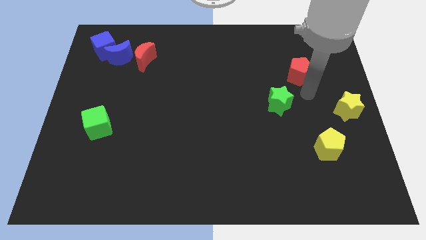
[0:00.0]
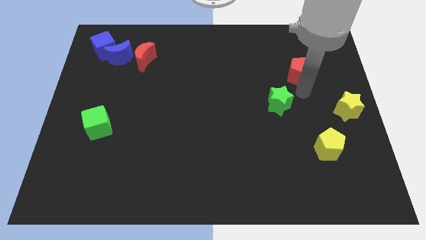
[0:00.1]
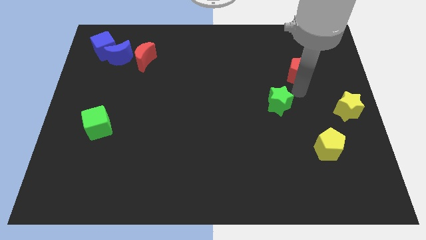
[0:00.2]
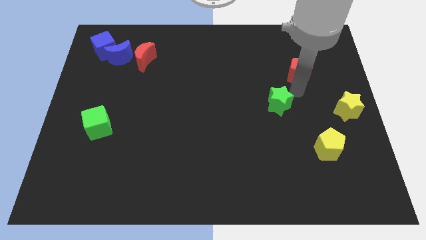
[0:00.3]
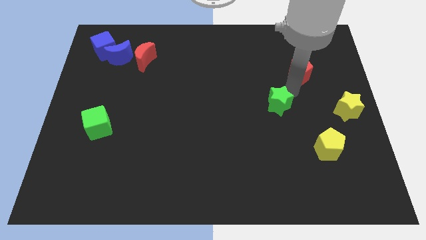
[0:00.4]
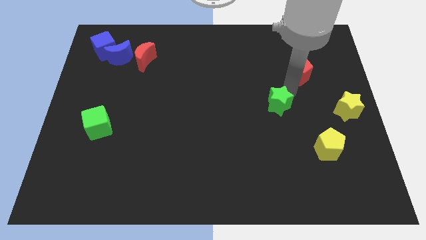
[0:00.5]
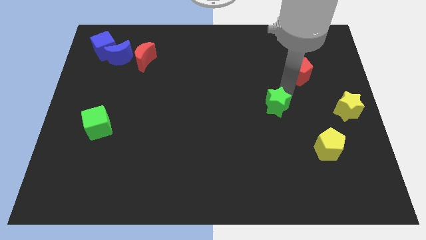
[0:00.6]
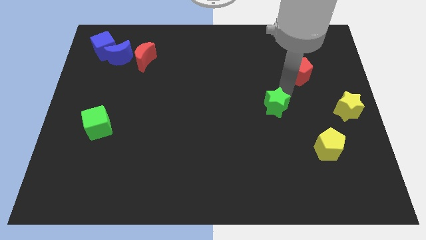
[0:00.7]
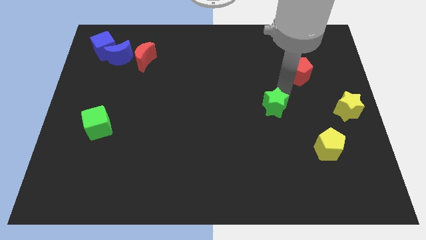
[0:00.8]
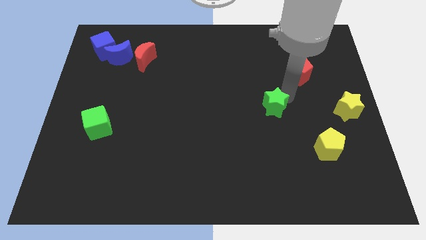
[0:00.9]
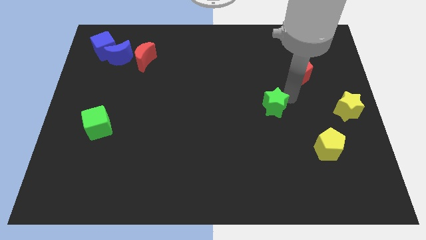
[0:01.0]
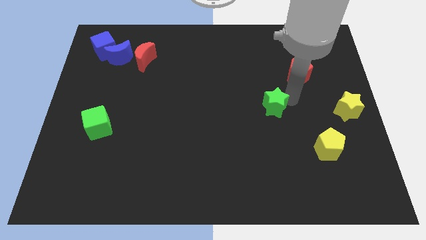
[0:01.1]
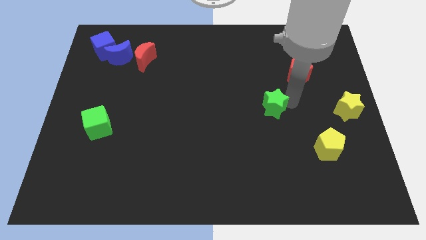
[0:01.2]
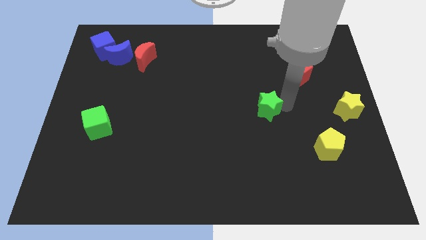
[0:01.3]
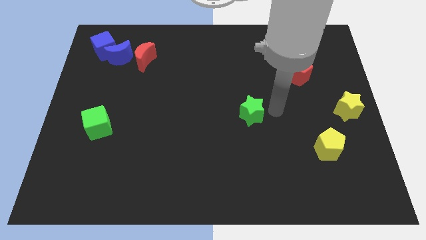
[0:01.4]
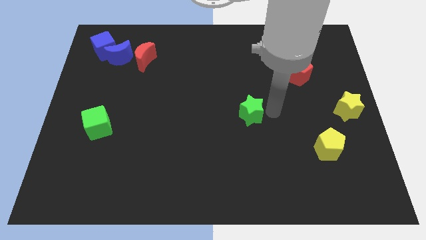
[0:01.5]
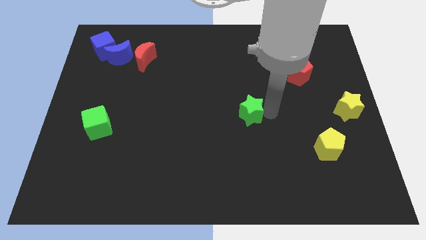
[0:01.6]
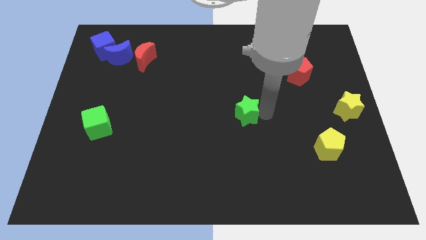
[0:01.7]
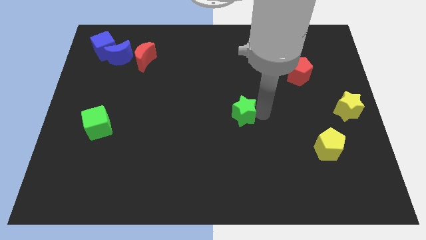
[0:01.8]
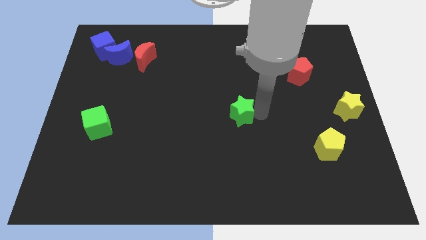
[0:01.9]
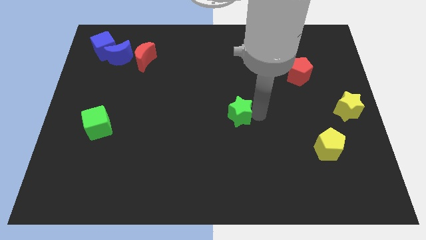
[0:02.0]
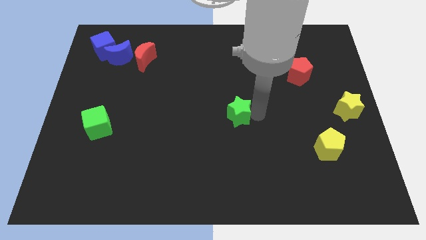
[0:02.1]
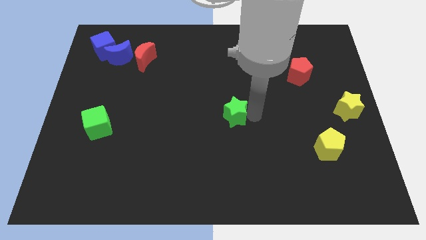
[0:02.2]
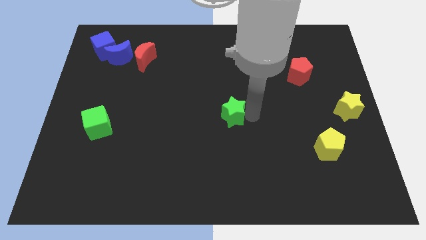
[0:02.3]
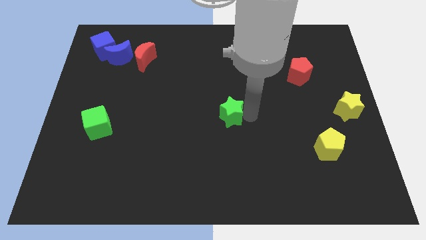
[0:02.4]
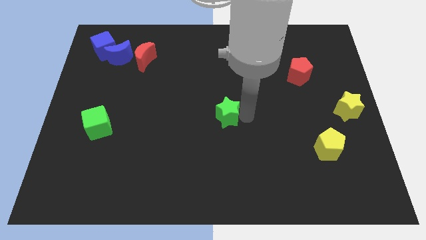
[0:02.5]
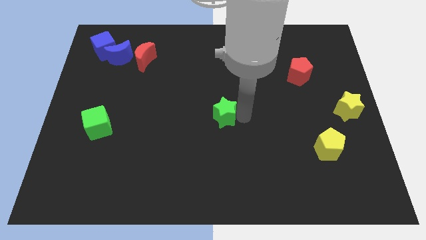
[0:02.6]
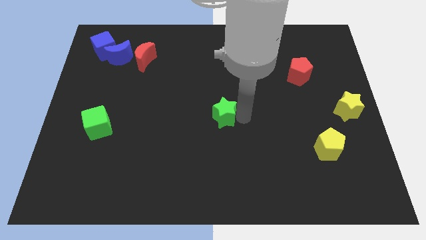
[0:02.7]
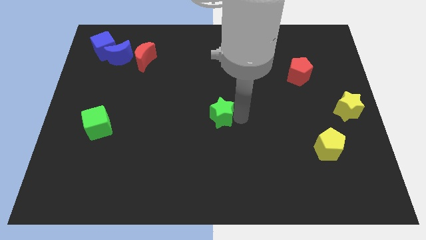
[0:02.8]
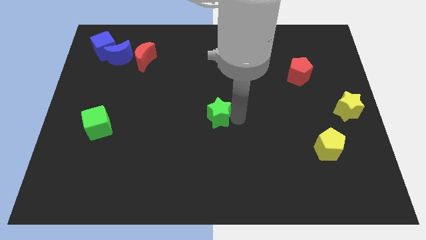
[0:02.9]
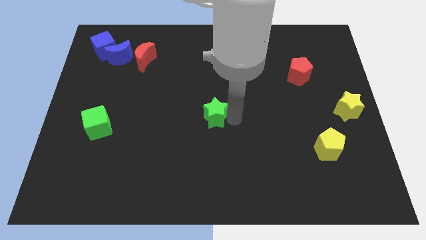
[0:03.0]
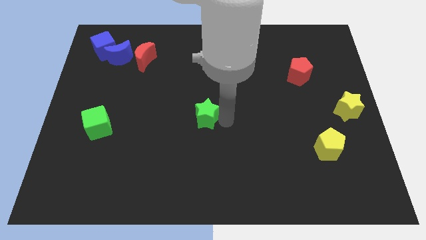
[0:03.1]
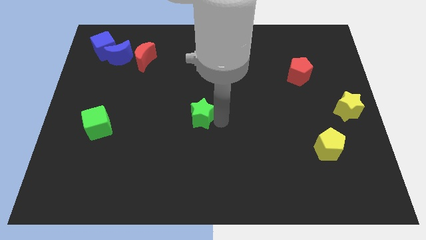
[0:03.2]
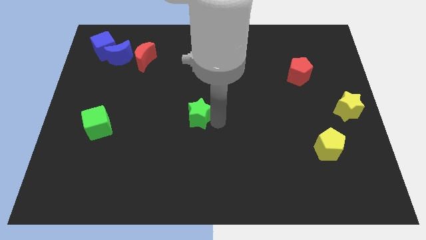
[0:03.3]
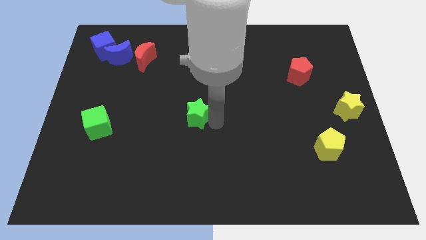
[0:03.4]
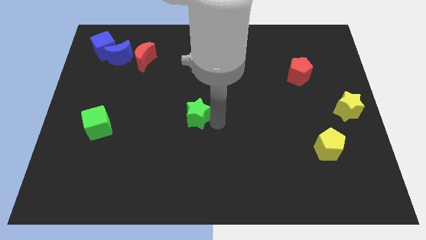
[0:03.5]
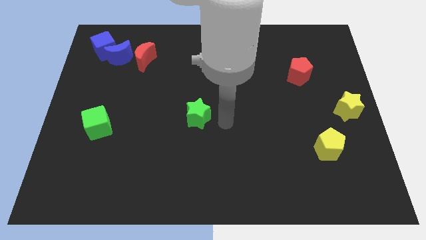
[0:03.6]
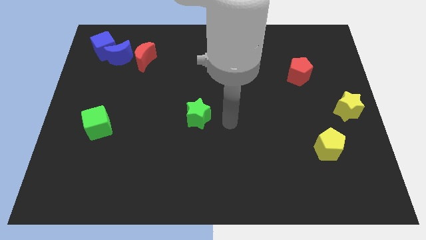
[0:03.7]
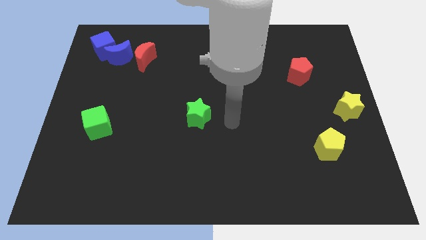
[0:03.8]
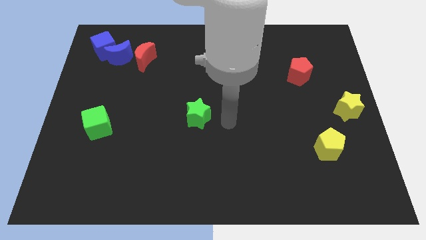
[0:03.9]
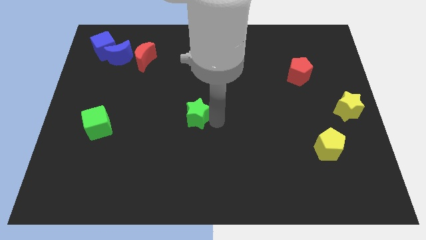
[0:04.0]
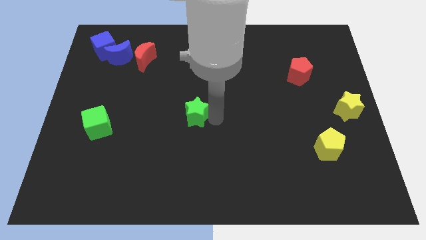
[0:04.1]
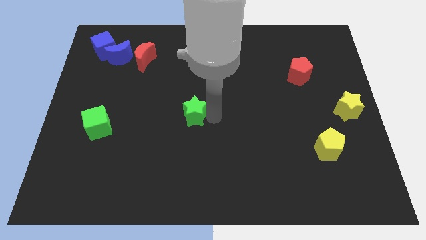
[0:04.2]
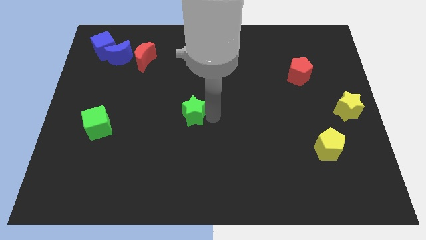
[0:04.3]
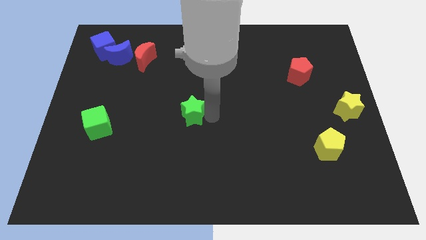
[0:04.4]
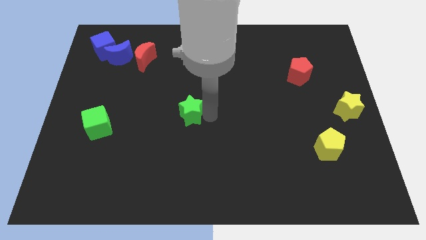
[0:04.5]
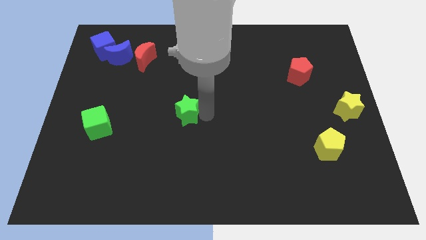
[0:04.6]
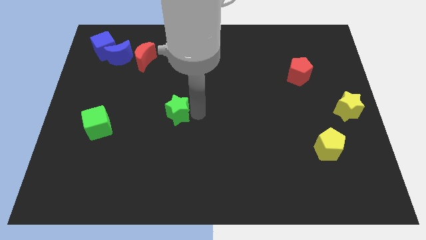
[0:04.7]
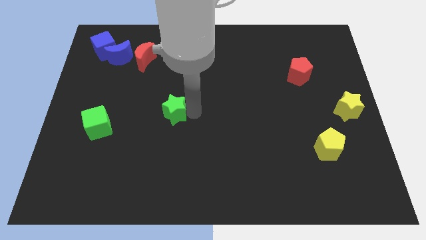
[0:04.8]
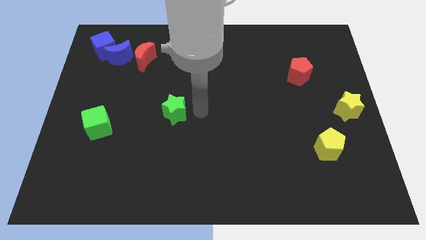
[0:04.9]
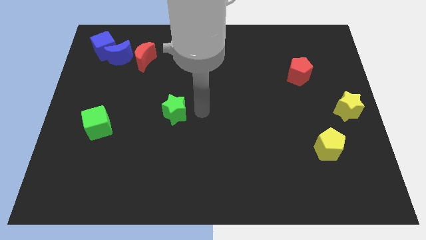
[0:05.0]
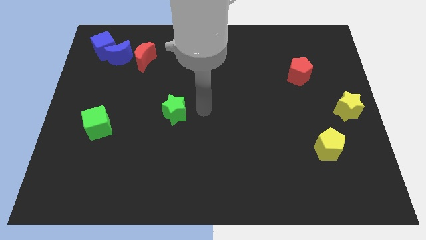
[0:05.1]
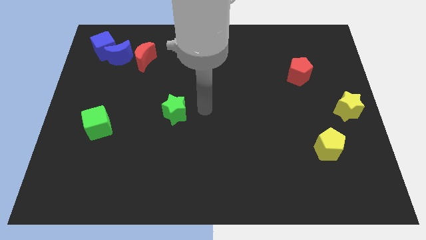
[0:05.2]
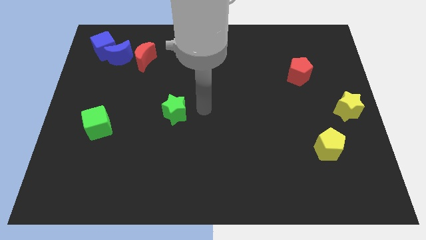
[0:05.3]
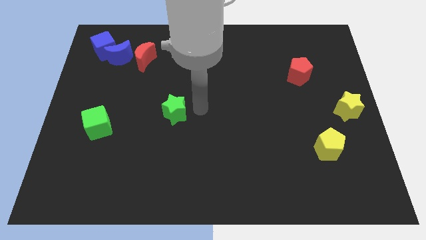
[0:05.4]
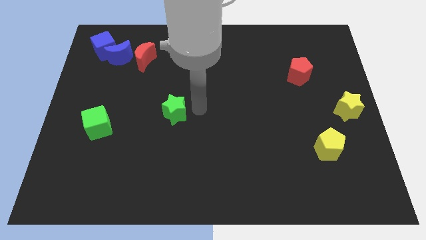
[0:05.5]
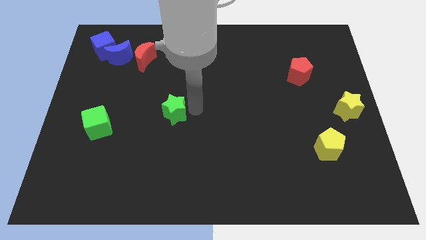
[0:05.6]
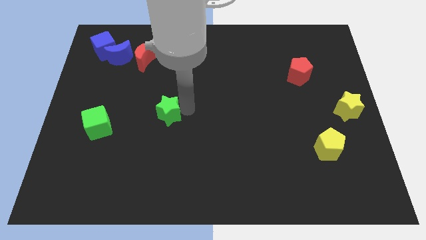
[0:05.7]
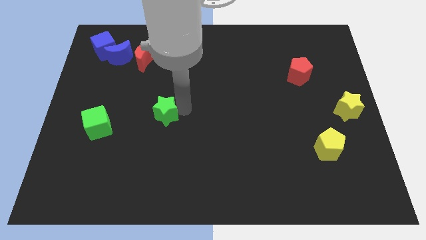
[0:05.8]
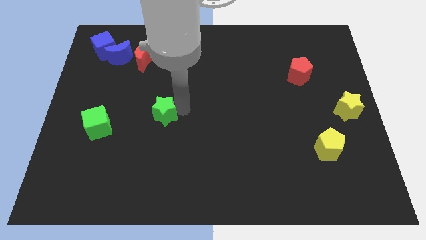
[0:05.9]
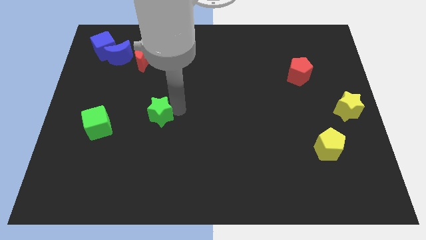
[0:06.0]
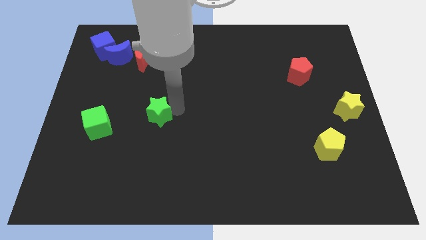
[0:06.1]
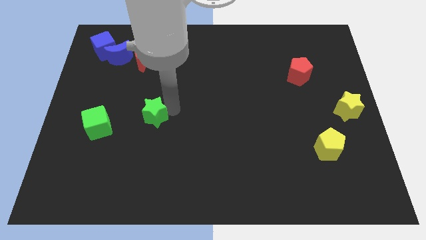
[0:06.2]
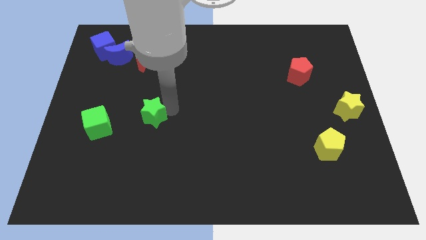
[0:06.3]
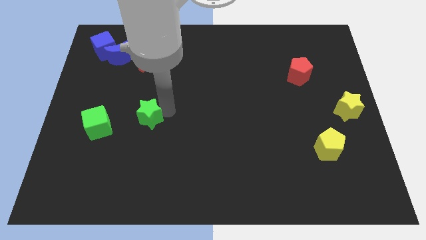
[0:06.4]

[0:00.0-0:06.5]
place the green star right to the green cube

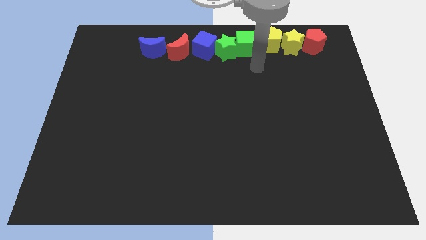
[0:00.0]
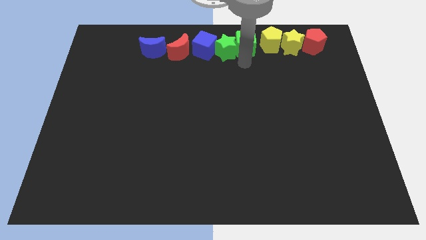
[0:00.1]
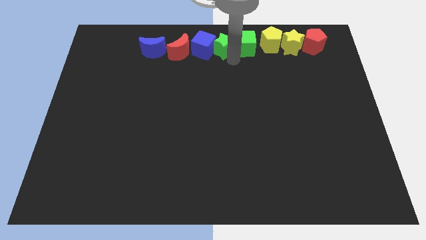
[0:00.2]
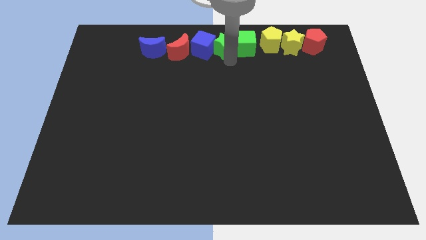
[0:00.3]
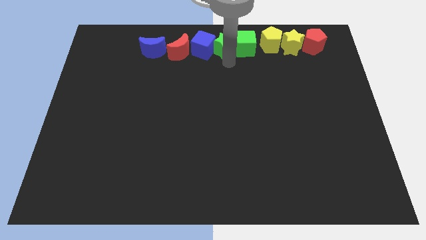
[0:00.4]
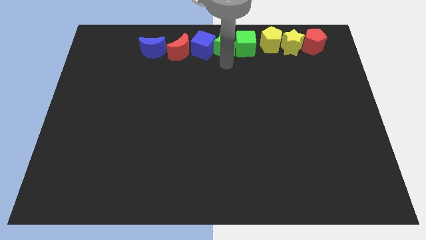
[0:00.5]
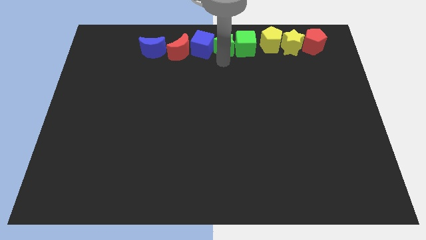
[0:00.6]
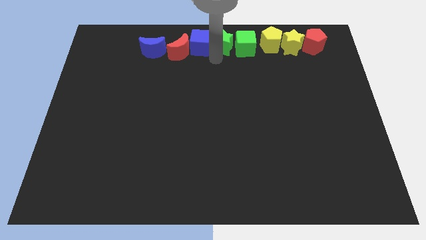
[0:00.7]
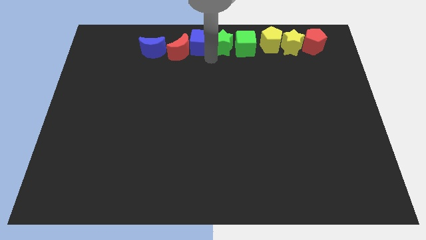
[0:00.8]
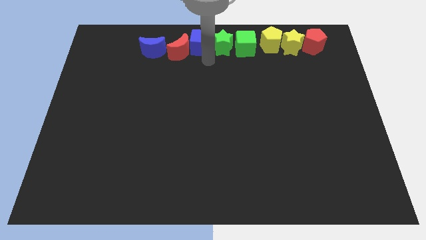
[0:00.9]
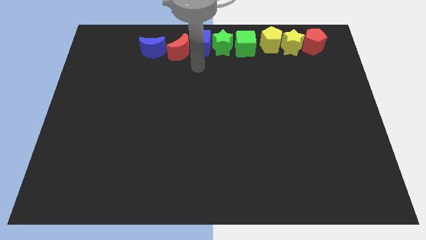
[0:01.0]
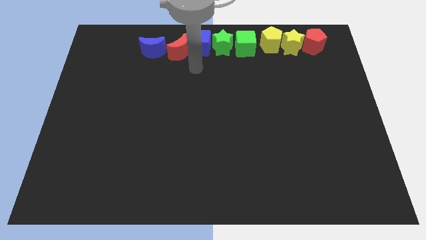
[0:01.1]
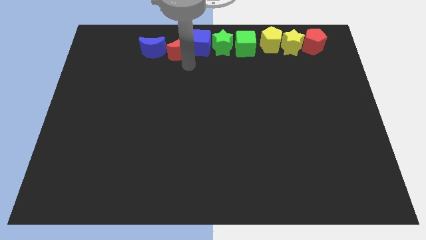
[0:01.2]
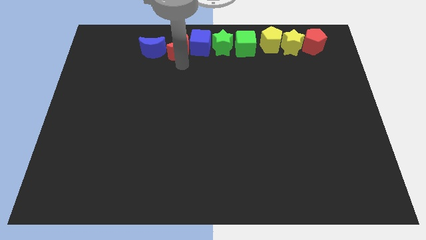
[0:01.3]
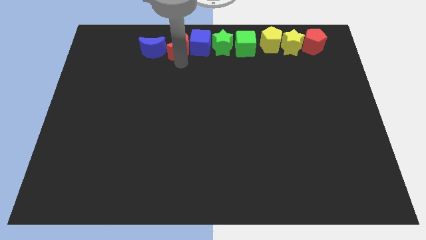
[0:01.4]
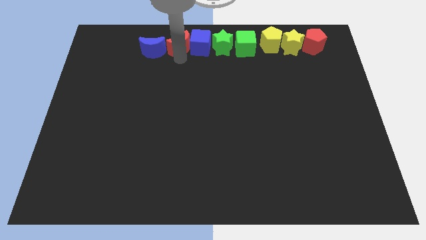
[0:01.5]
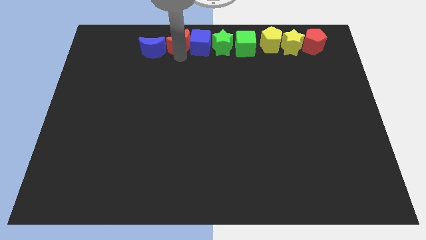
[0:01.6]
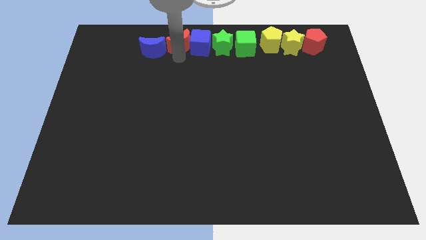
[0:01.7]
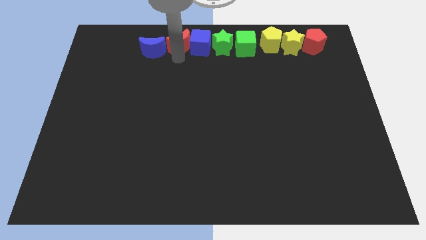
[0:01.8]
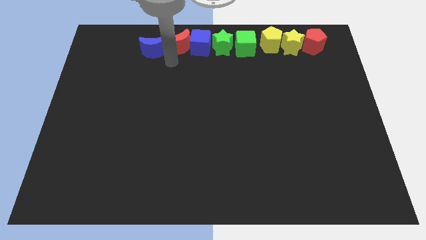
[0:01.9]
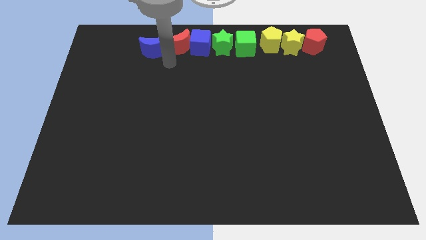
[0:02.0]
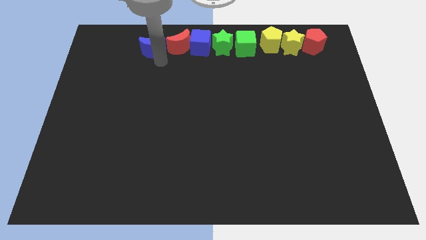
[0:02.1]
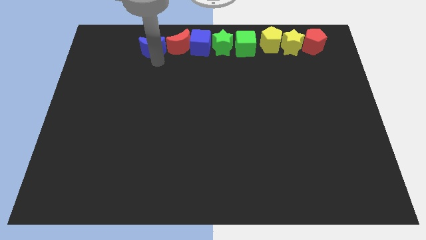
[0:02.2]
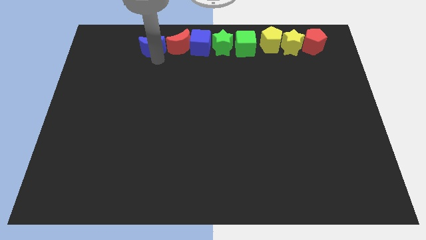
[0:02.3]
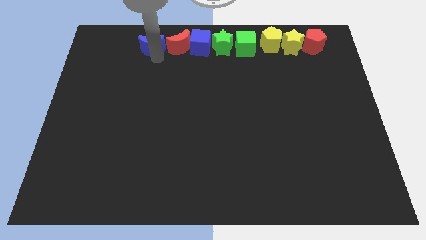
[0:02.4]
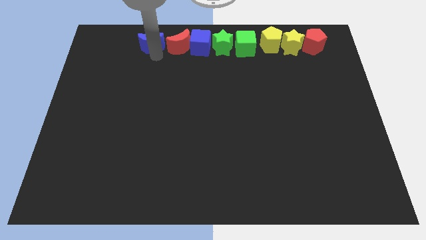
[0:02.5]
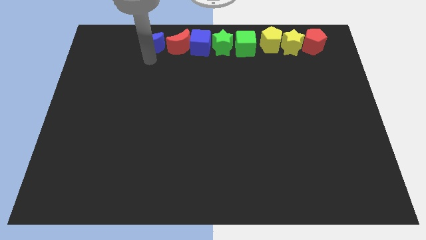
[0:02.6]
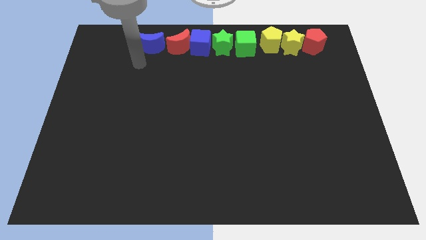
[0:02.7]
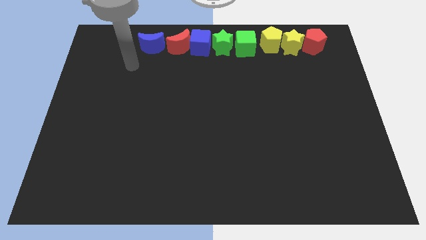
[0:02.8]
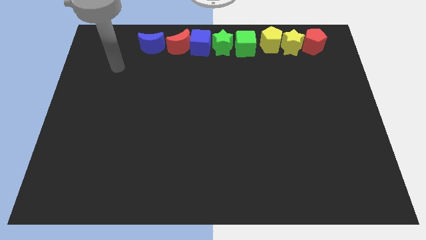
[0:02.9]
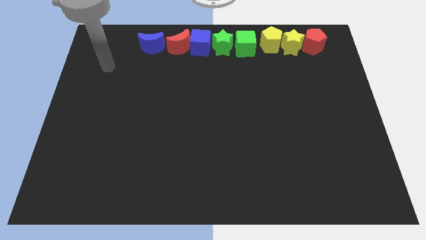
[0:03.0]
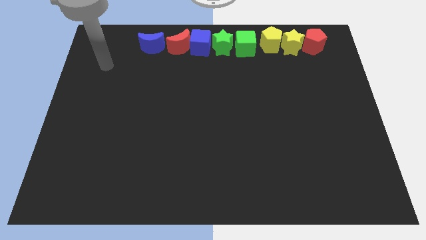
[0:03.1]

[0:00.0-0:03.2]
slightly push all the blocks towards up to form a horizontal line
